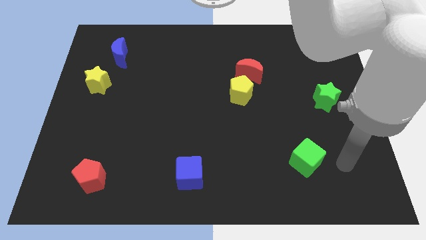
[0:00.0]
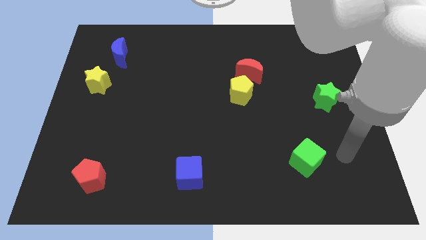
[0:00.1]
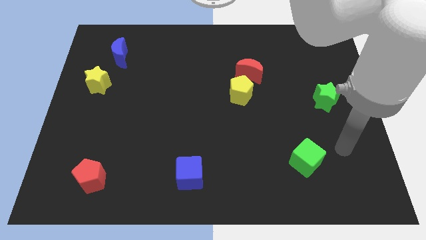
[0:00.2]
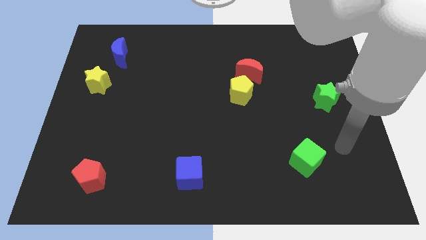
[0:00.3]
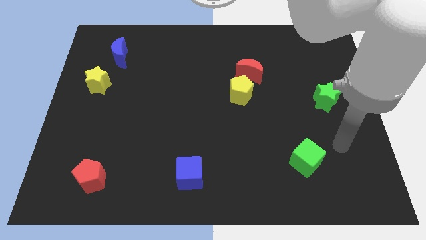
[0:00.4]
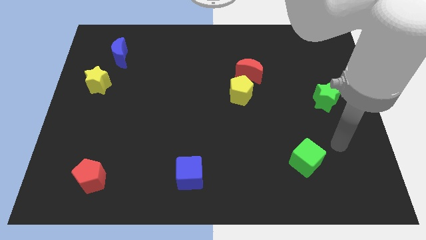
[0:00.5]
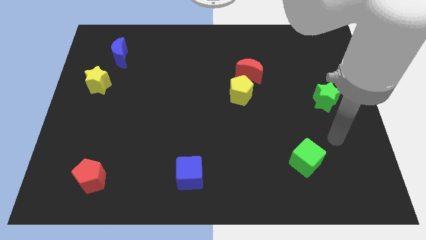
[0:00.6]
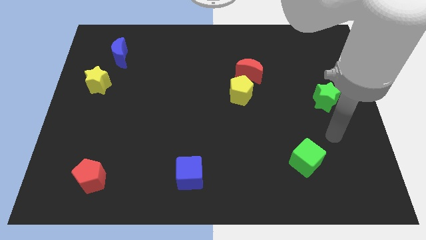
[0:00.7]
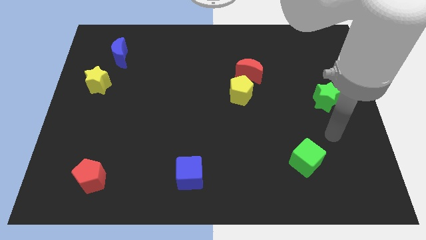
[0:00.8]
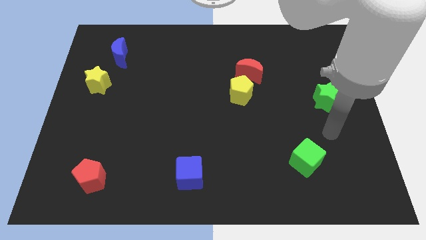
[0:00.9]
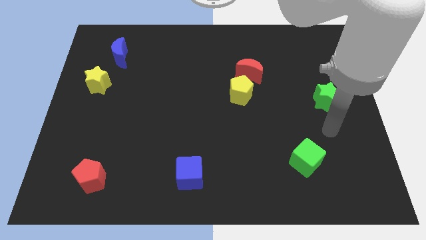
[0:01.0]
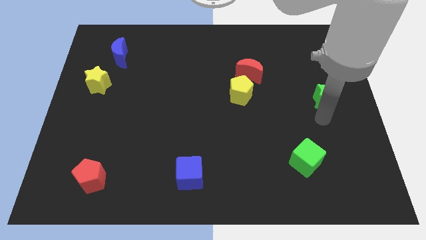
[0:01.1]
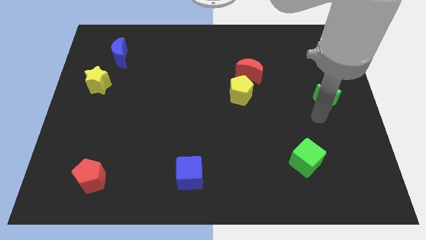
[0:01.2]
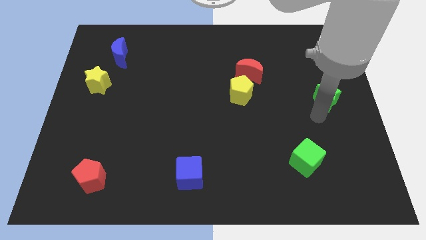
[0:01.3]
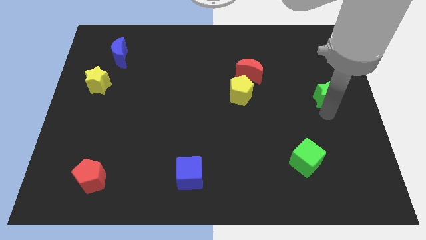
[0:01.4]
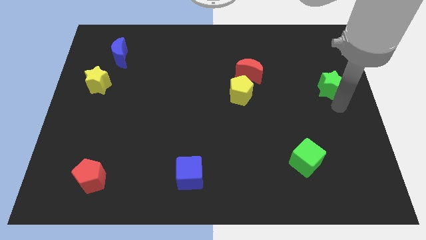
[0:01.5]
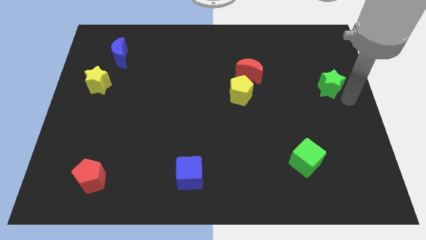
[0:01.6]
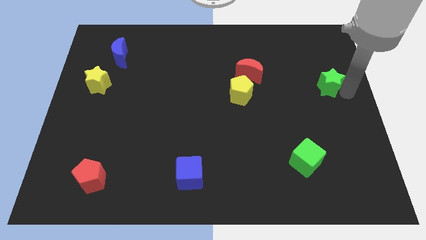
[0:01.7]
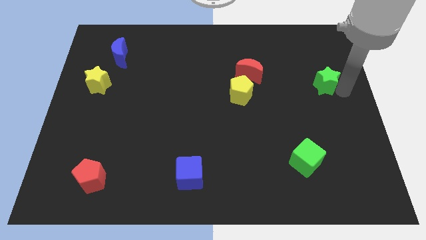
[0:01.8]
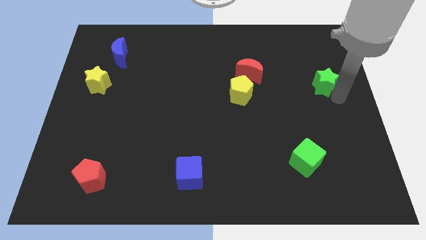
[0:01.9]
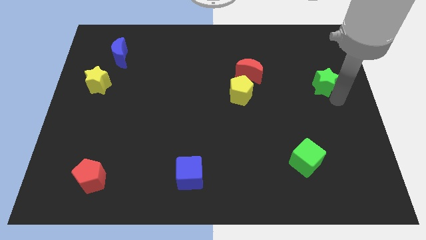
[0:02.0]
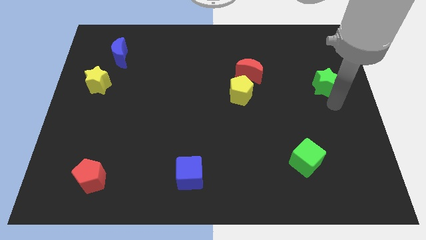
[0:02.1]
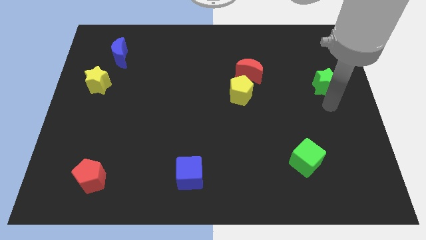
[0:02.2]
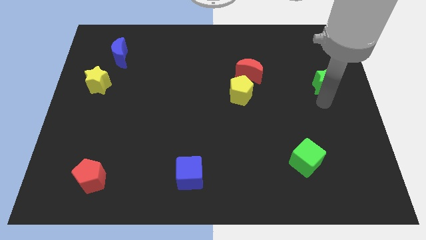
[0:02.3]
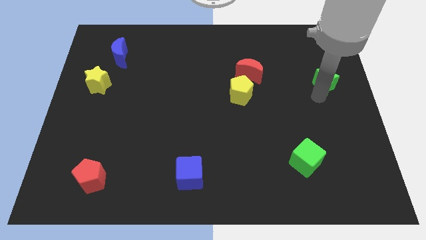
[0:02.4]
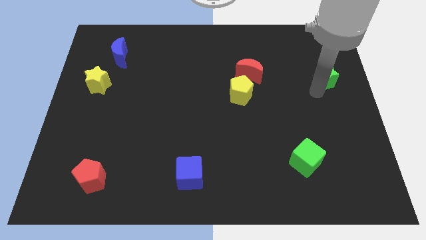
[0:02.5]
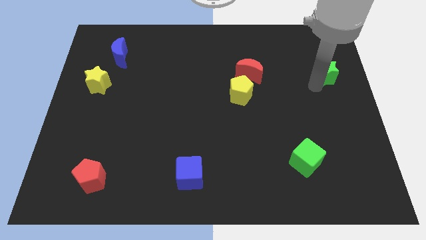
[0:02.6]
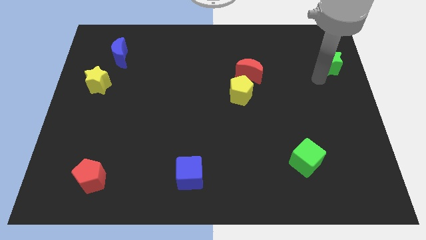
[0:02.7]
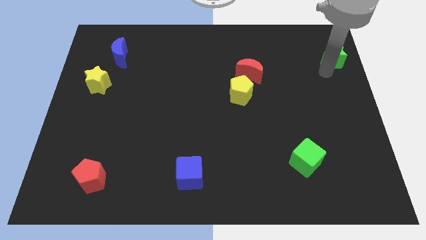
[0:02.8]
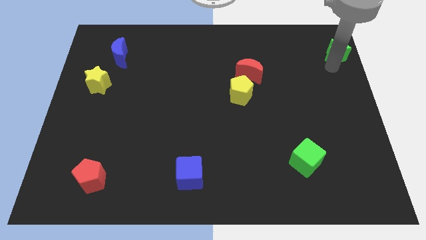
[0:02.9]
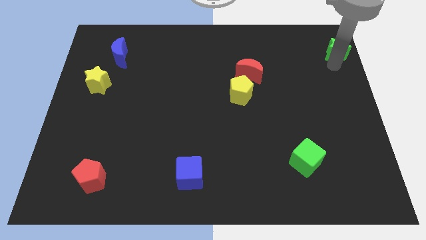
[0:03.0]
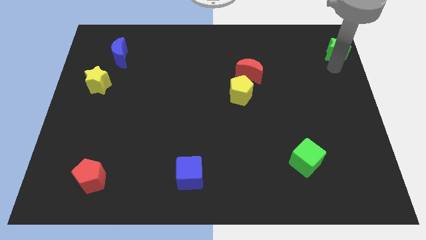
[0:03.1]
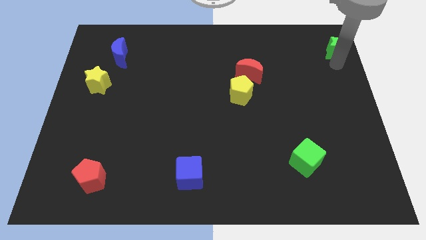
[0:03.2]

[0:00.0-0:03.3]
push the green star to the top right corner

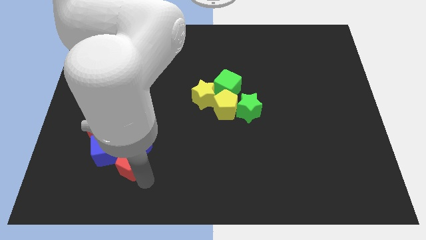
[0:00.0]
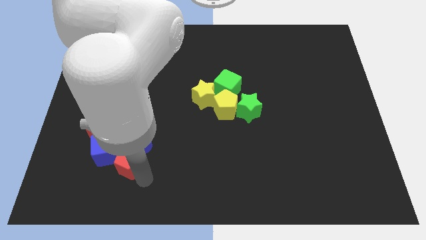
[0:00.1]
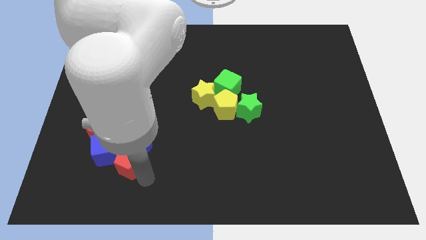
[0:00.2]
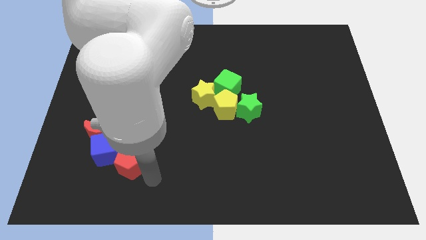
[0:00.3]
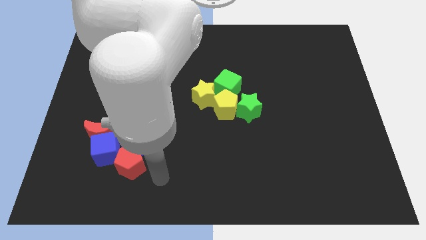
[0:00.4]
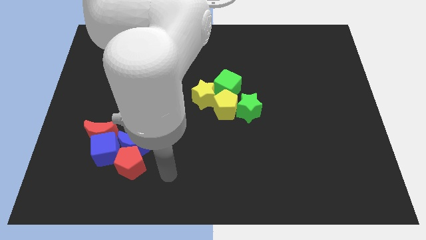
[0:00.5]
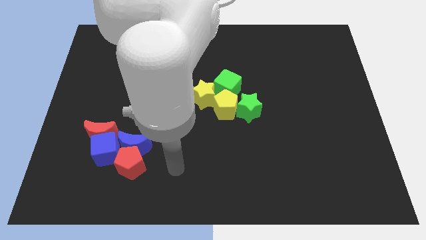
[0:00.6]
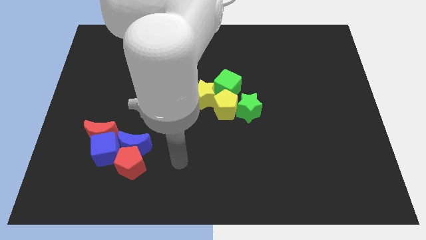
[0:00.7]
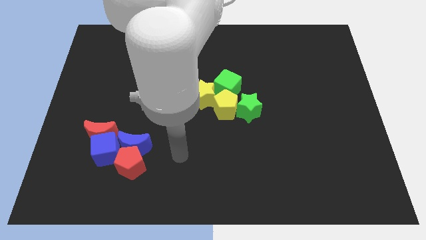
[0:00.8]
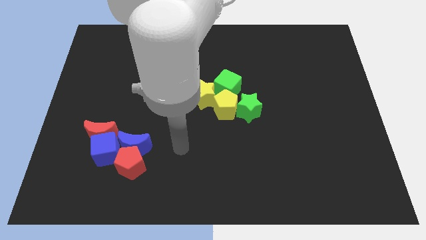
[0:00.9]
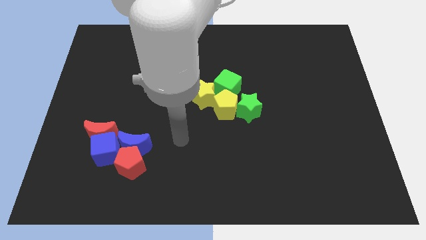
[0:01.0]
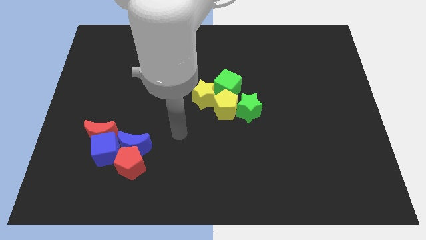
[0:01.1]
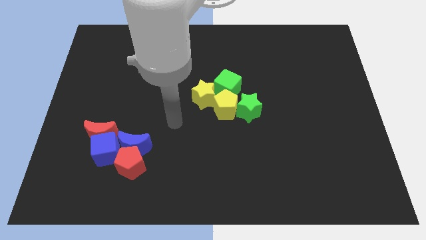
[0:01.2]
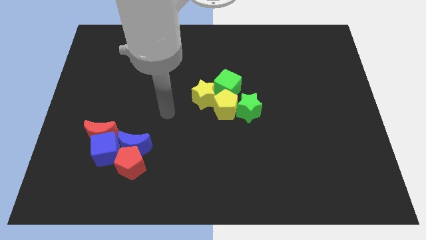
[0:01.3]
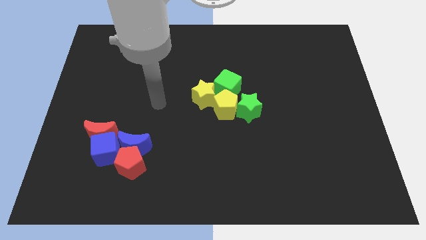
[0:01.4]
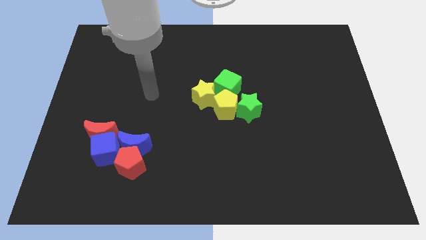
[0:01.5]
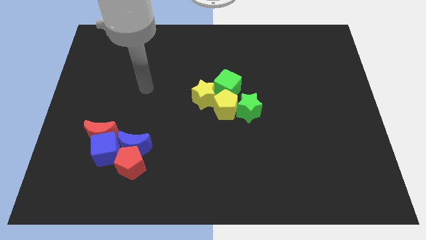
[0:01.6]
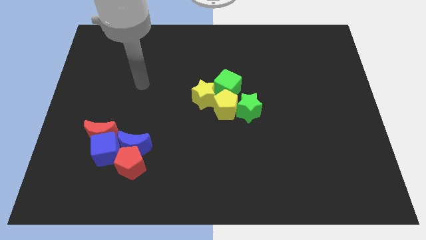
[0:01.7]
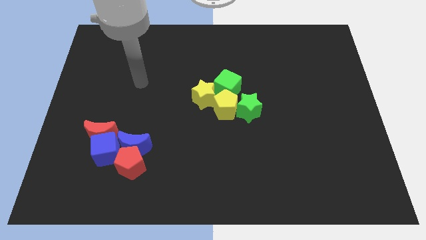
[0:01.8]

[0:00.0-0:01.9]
move the arm away from the red pentagon

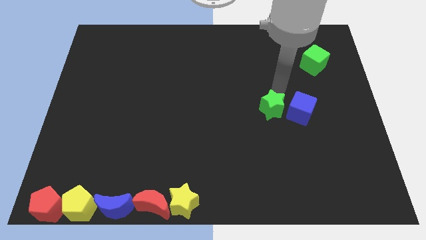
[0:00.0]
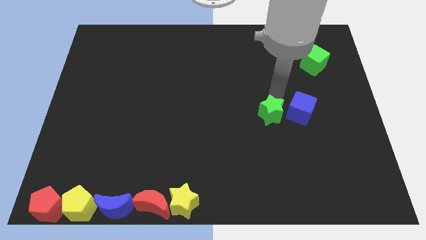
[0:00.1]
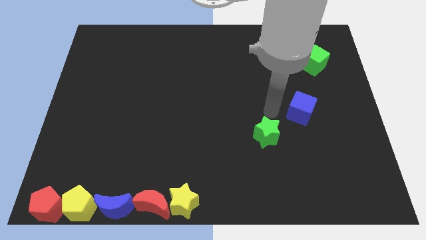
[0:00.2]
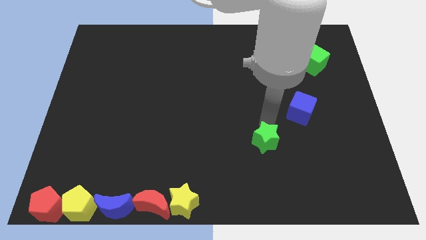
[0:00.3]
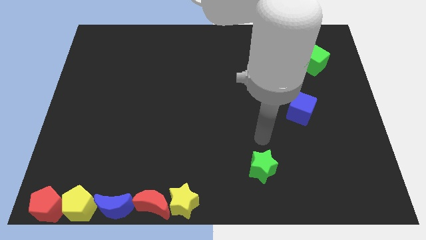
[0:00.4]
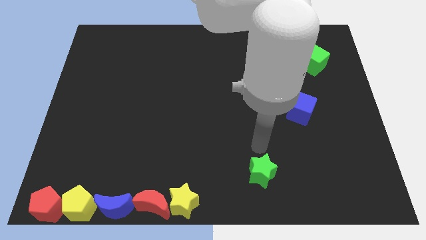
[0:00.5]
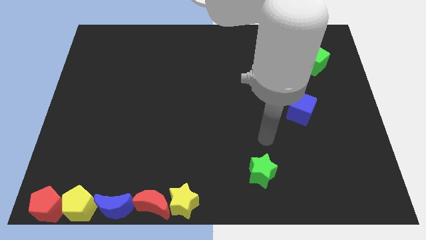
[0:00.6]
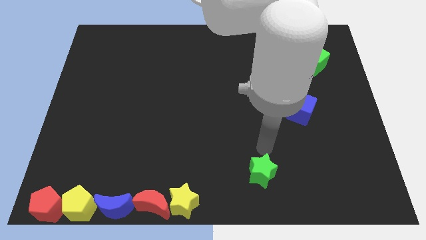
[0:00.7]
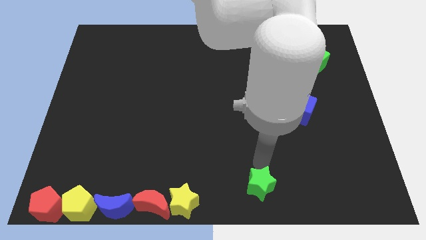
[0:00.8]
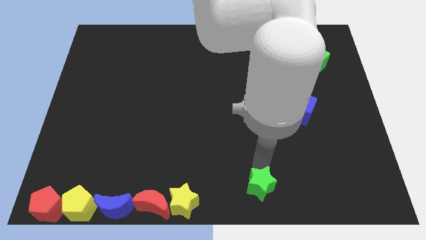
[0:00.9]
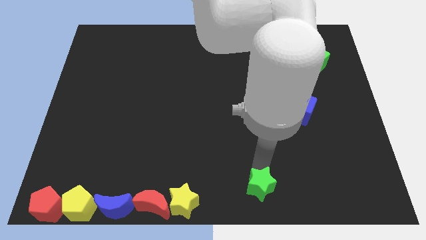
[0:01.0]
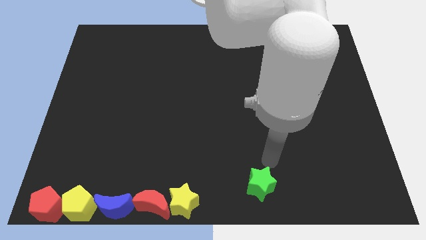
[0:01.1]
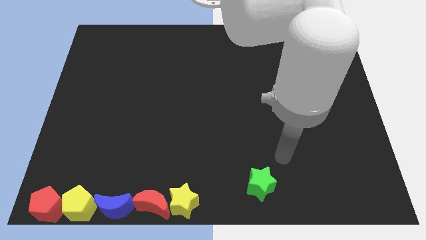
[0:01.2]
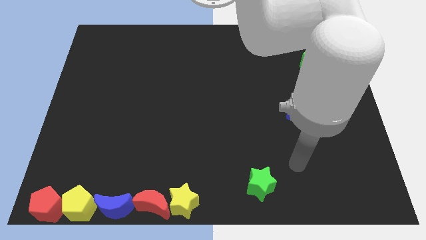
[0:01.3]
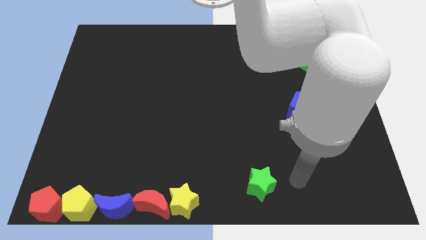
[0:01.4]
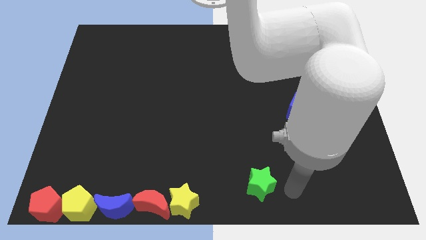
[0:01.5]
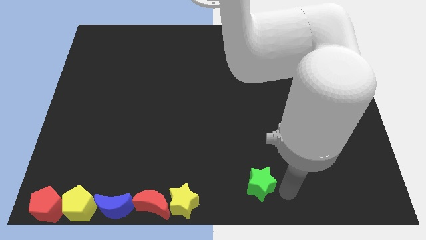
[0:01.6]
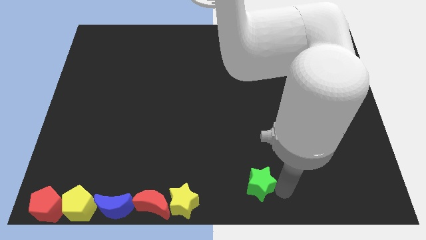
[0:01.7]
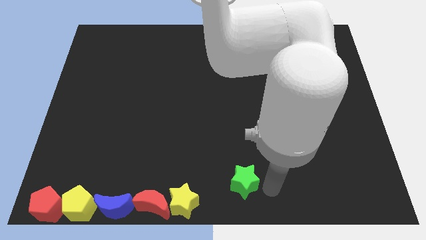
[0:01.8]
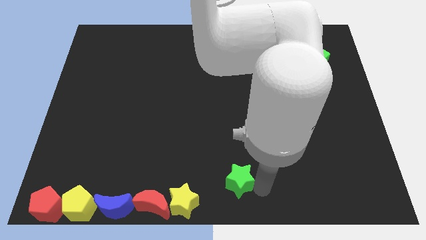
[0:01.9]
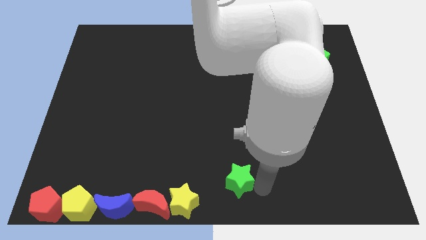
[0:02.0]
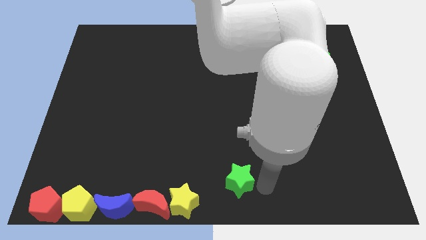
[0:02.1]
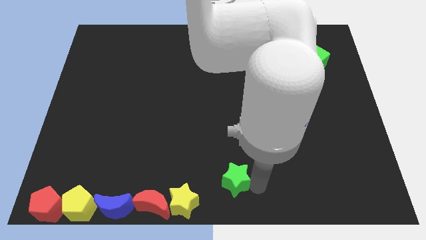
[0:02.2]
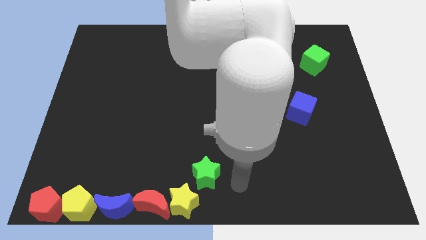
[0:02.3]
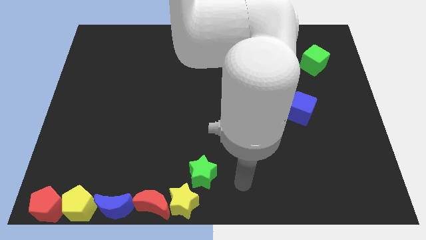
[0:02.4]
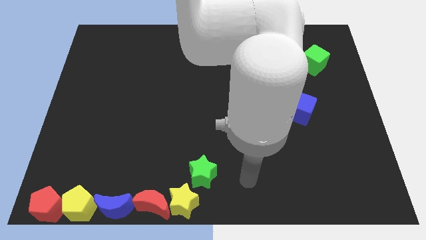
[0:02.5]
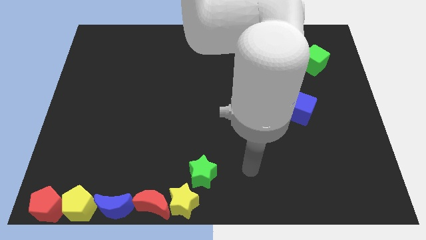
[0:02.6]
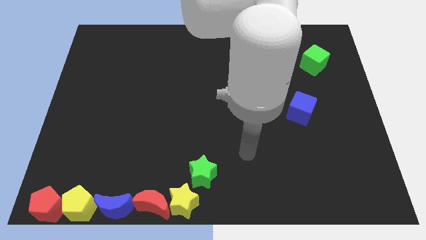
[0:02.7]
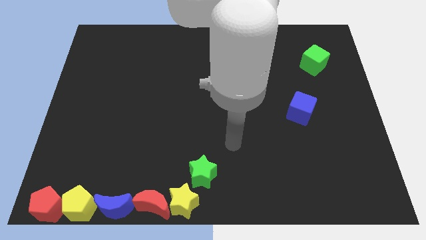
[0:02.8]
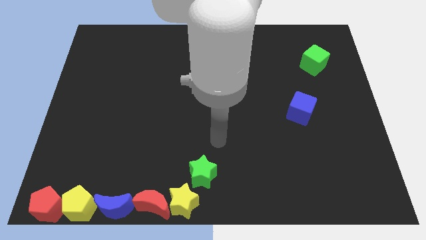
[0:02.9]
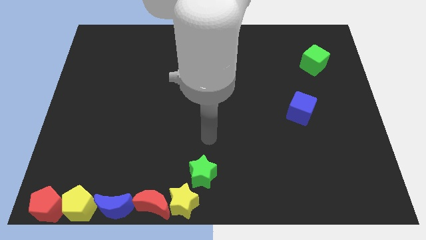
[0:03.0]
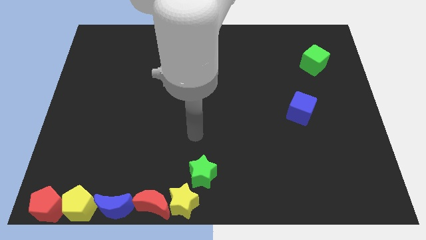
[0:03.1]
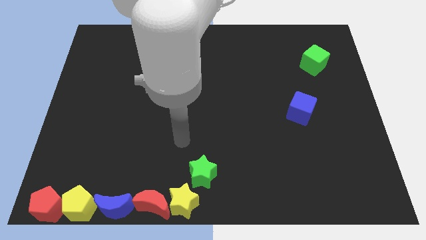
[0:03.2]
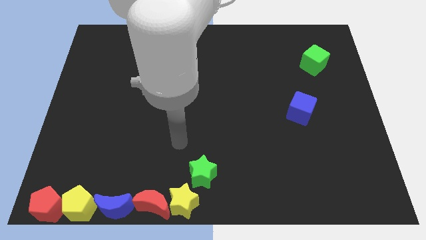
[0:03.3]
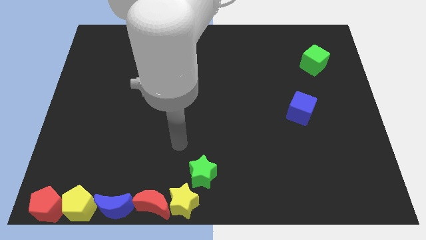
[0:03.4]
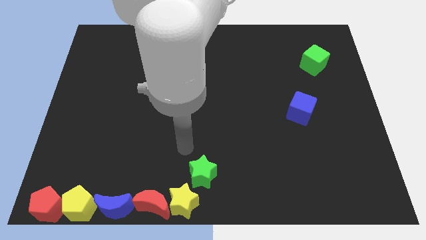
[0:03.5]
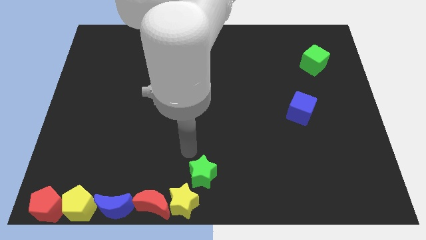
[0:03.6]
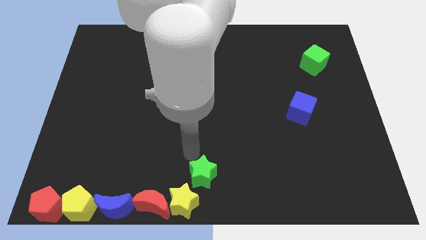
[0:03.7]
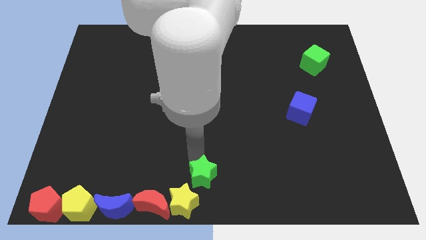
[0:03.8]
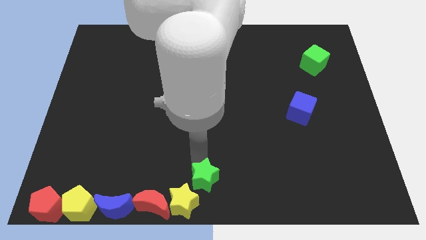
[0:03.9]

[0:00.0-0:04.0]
place the green star diagonally right to the yellow star
